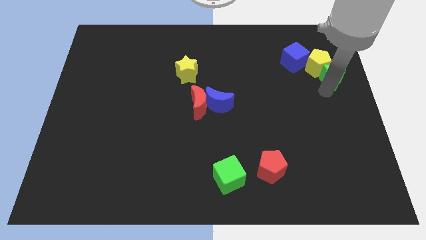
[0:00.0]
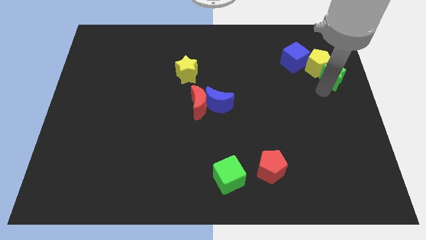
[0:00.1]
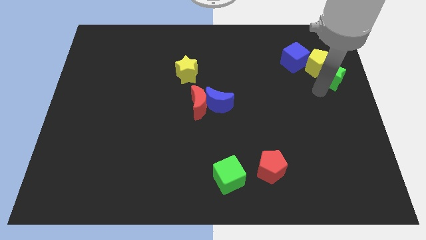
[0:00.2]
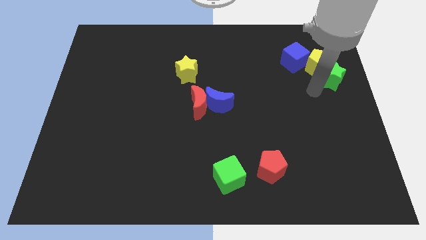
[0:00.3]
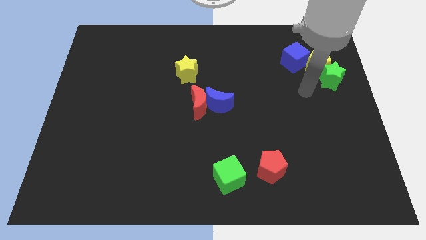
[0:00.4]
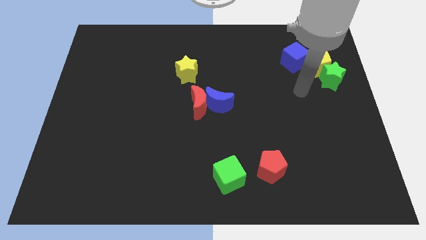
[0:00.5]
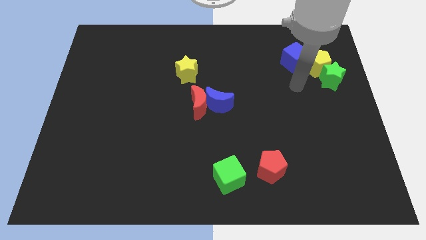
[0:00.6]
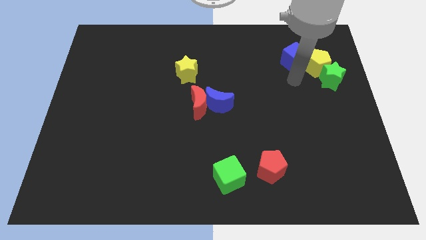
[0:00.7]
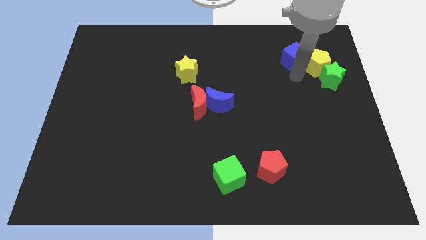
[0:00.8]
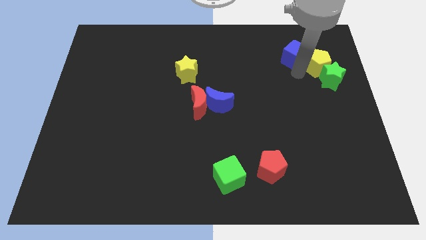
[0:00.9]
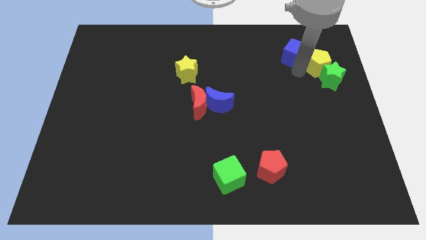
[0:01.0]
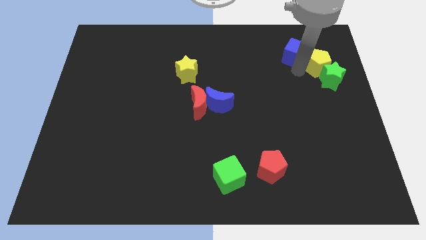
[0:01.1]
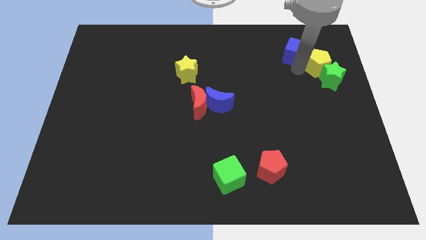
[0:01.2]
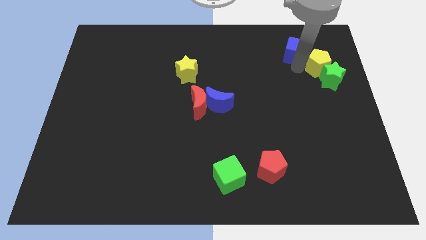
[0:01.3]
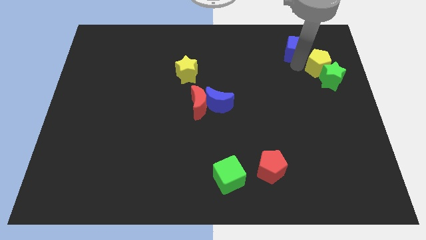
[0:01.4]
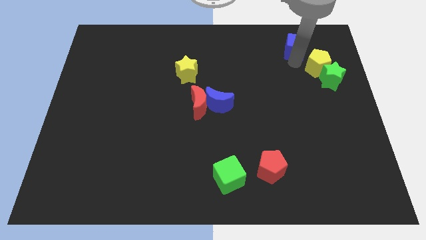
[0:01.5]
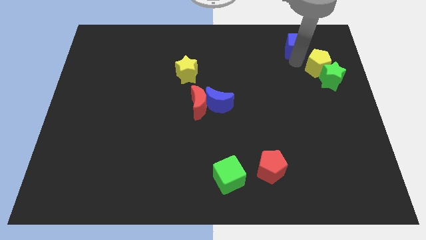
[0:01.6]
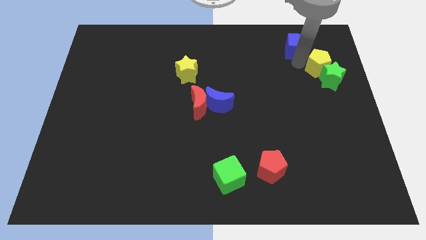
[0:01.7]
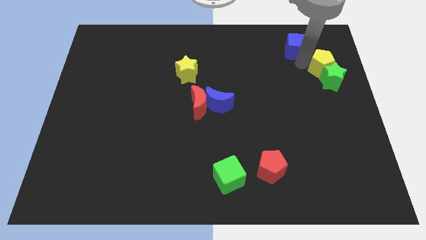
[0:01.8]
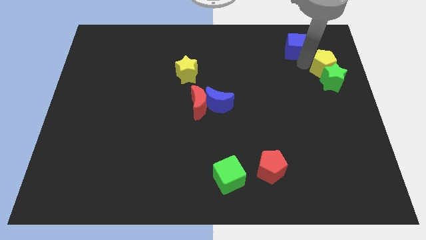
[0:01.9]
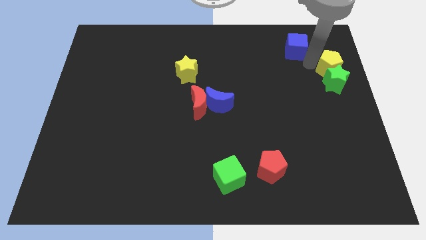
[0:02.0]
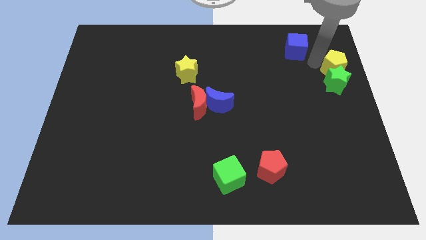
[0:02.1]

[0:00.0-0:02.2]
place your hand in between the blue cube and yellow pentagon

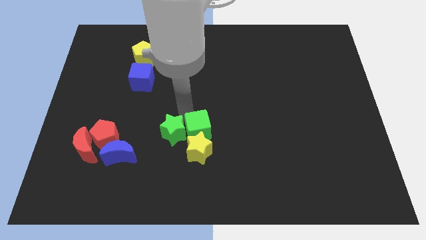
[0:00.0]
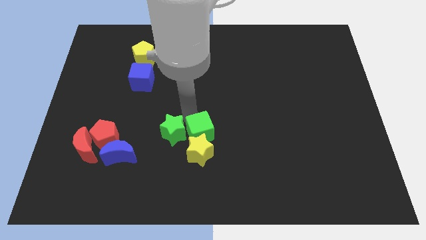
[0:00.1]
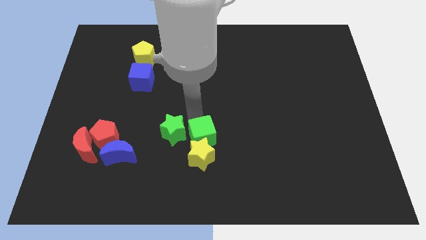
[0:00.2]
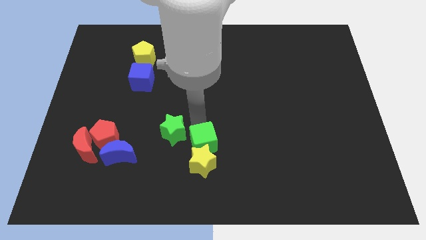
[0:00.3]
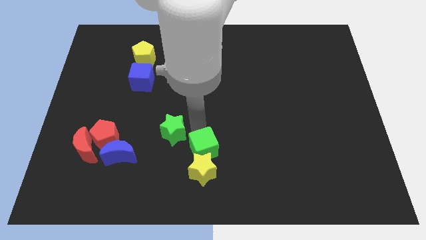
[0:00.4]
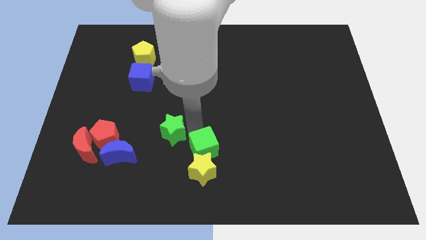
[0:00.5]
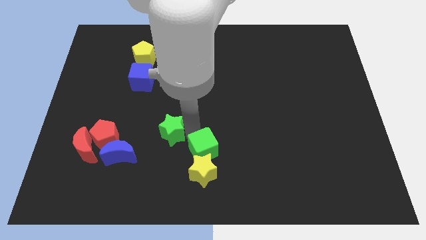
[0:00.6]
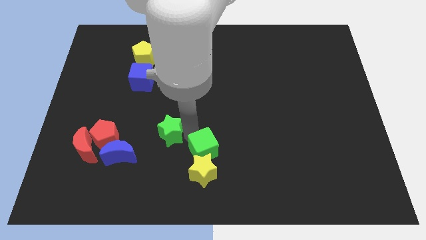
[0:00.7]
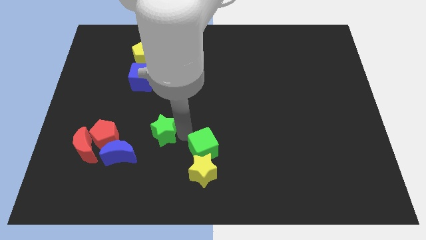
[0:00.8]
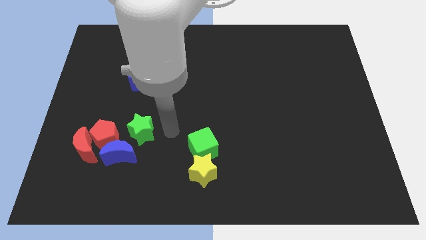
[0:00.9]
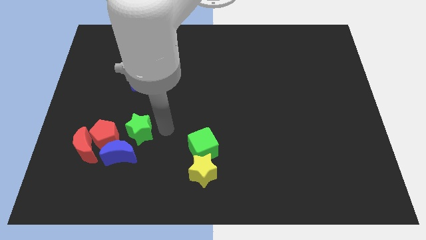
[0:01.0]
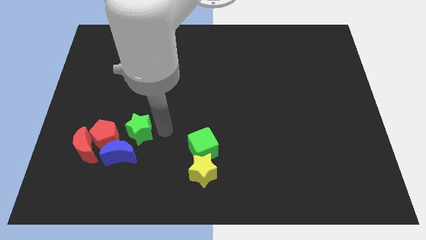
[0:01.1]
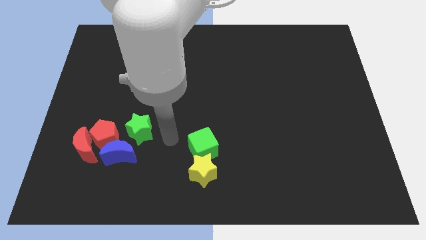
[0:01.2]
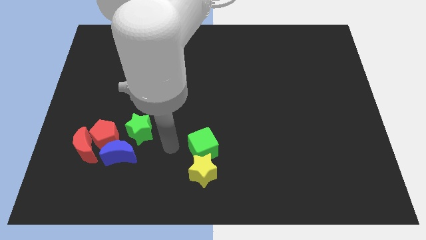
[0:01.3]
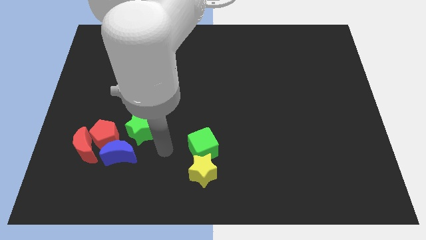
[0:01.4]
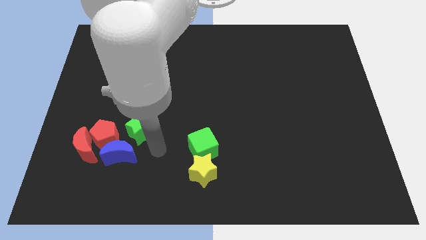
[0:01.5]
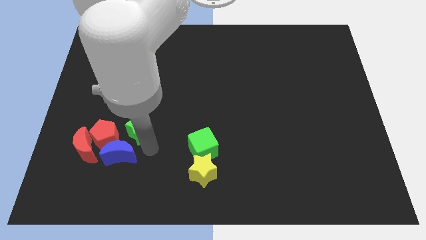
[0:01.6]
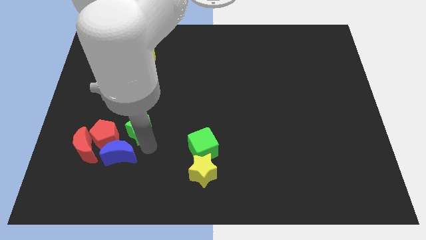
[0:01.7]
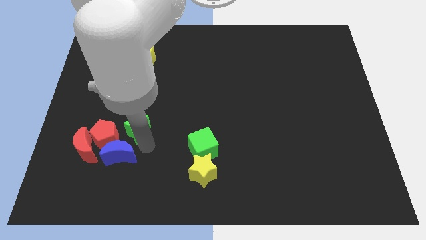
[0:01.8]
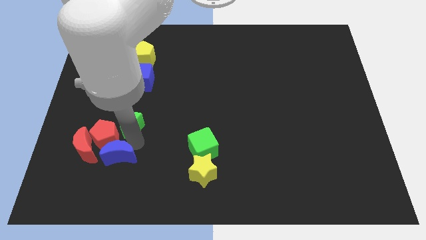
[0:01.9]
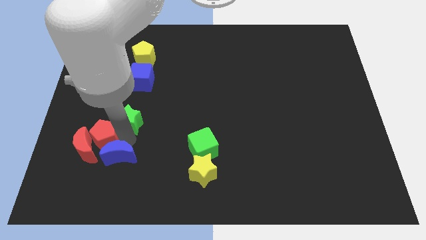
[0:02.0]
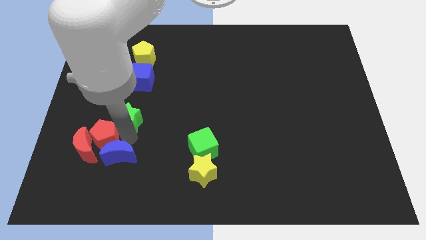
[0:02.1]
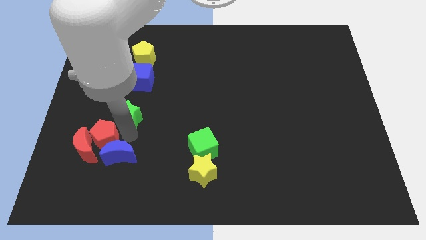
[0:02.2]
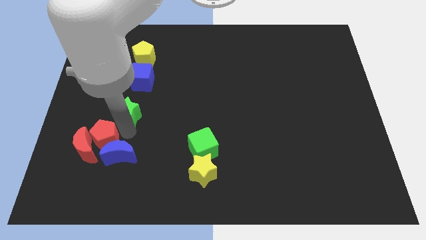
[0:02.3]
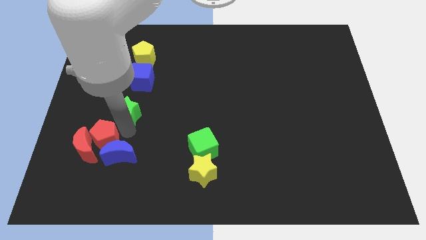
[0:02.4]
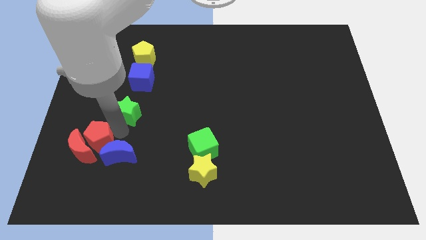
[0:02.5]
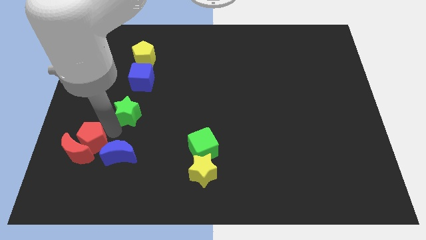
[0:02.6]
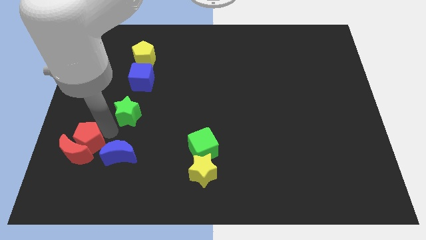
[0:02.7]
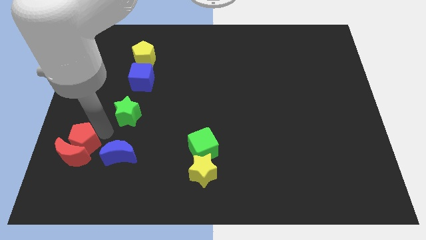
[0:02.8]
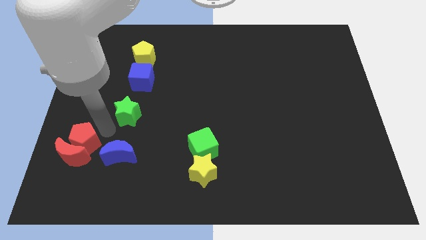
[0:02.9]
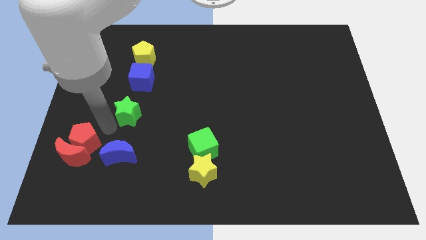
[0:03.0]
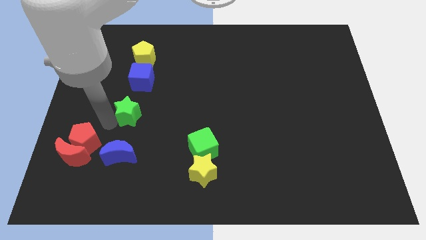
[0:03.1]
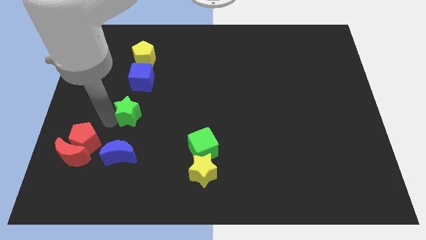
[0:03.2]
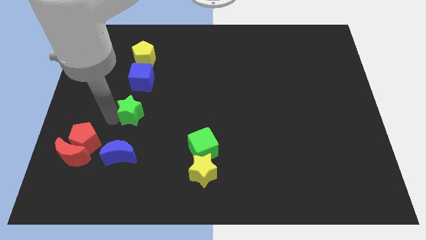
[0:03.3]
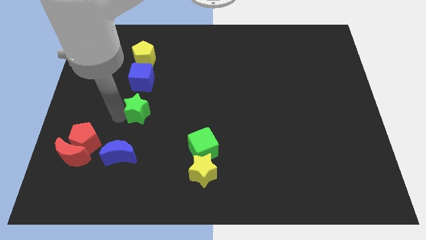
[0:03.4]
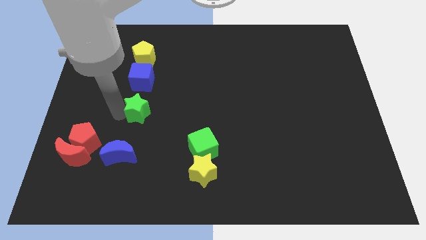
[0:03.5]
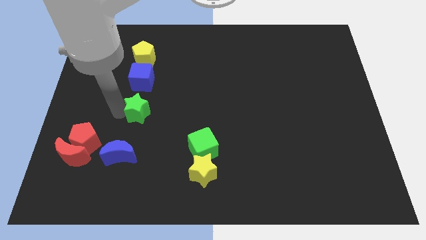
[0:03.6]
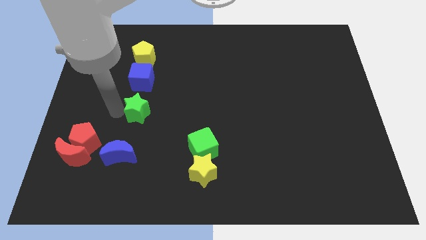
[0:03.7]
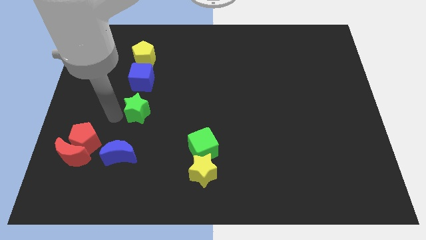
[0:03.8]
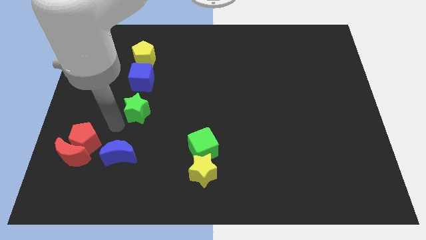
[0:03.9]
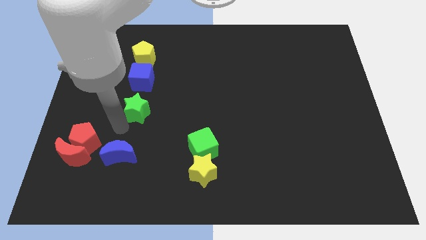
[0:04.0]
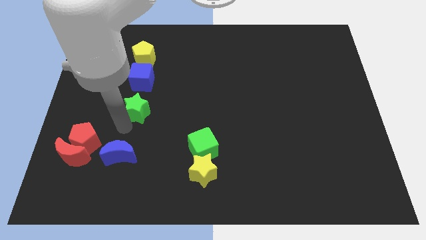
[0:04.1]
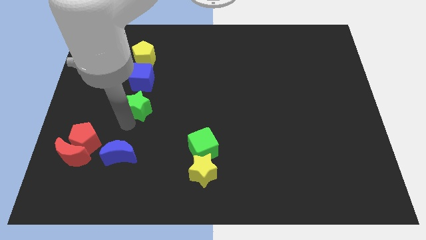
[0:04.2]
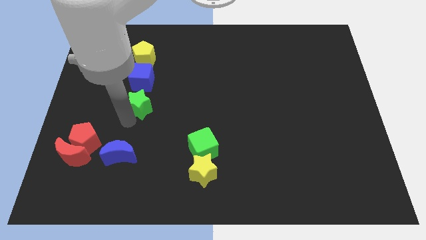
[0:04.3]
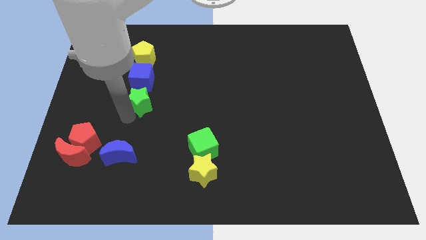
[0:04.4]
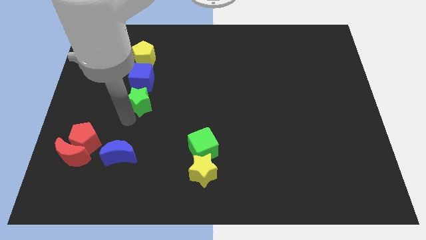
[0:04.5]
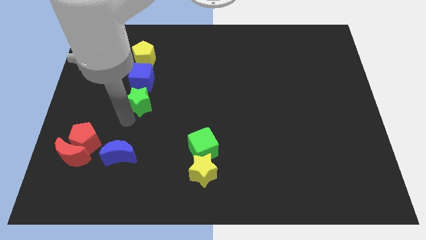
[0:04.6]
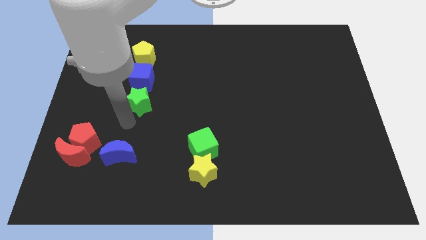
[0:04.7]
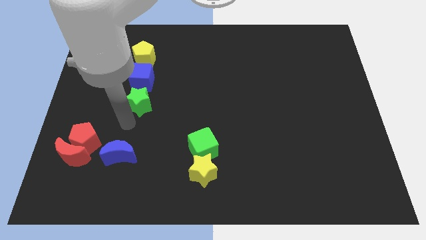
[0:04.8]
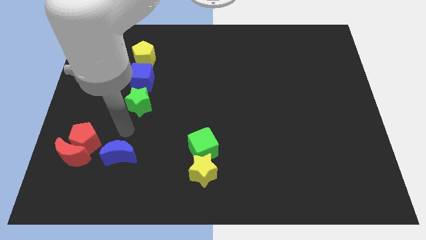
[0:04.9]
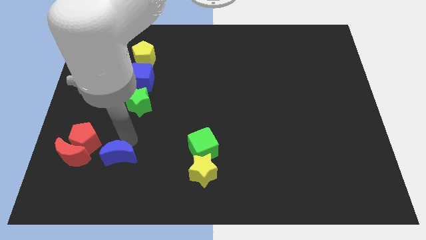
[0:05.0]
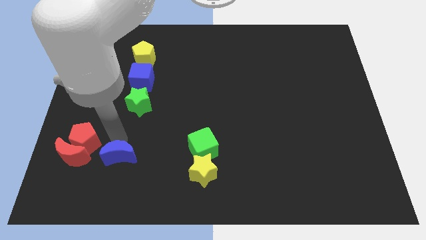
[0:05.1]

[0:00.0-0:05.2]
make a green star to touch the bottom of the blue cube

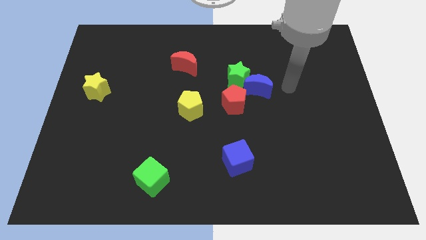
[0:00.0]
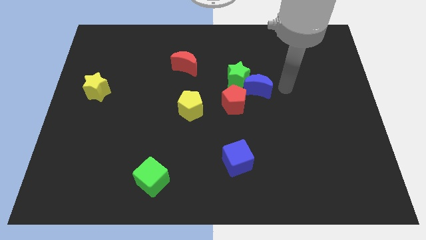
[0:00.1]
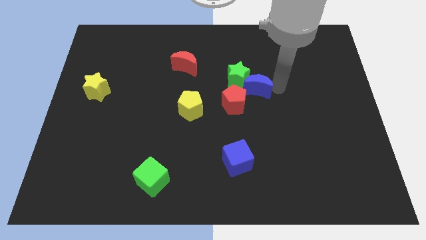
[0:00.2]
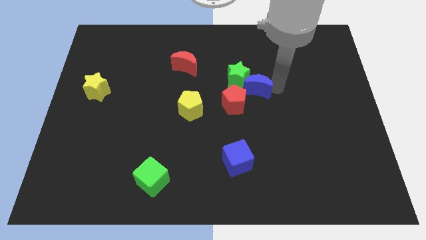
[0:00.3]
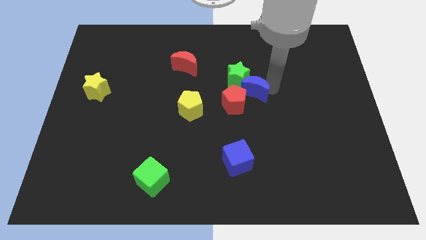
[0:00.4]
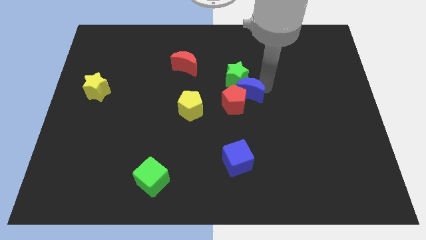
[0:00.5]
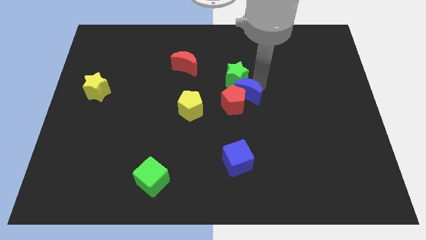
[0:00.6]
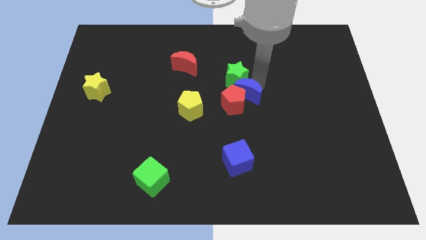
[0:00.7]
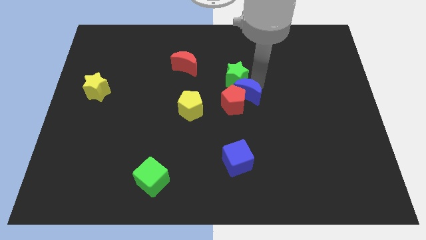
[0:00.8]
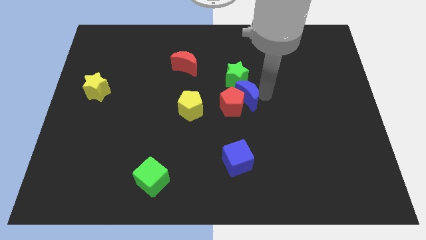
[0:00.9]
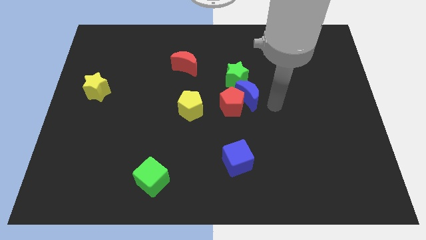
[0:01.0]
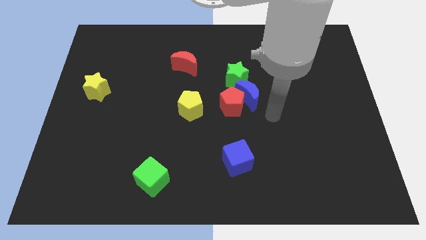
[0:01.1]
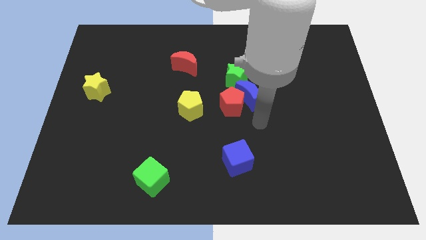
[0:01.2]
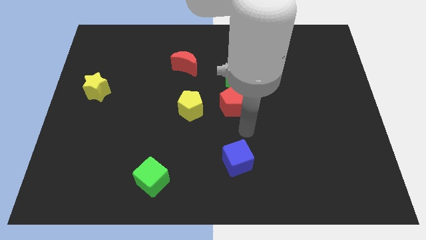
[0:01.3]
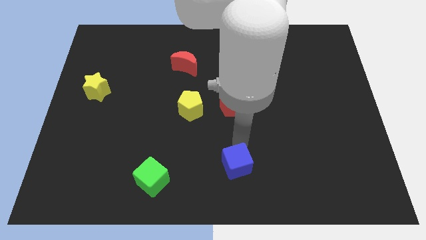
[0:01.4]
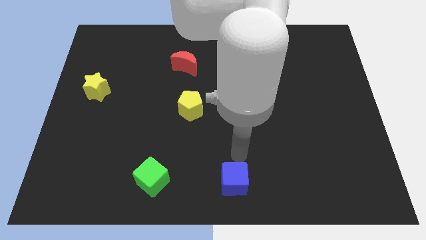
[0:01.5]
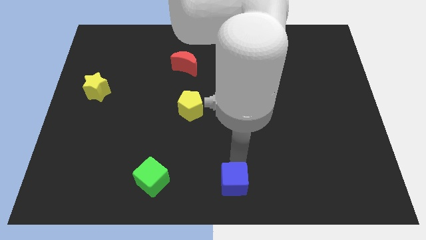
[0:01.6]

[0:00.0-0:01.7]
point your arm above the blue cube
